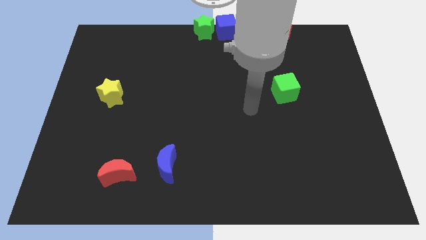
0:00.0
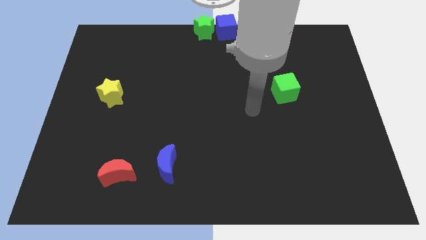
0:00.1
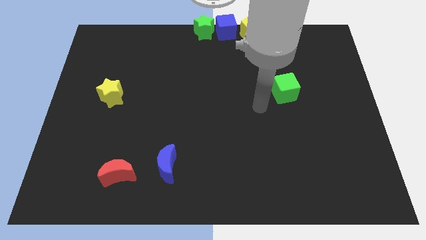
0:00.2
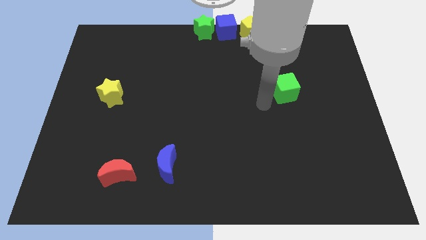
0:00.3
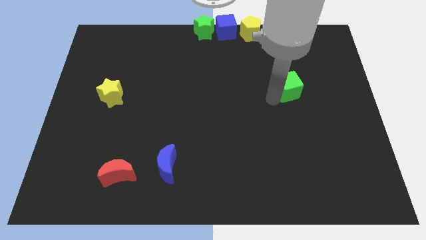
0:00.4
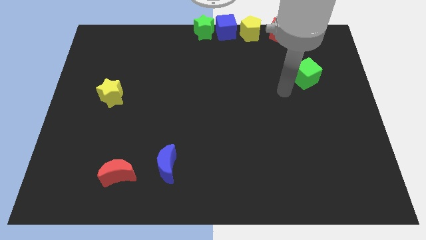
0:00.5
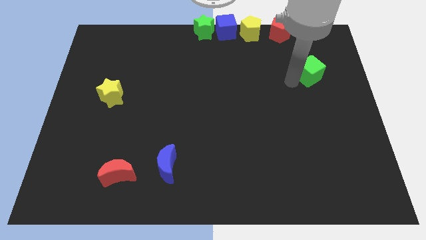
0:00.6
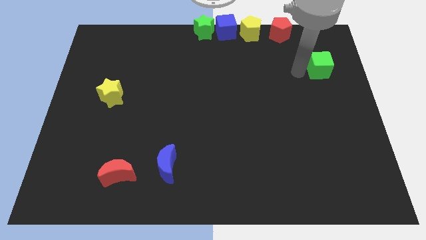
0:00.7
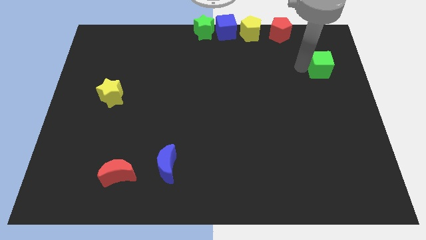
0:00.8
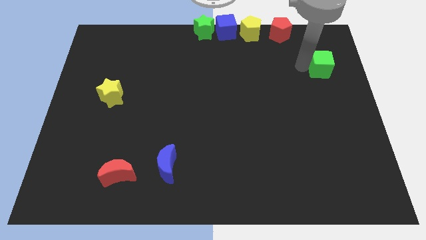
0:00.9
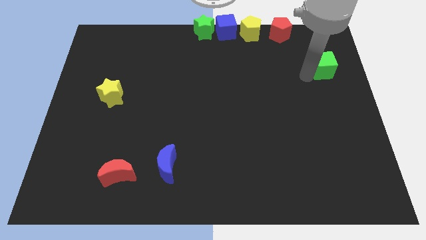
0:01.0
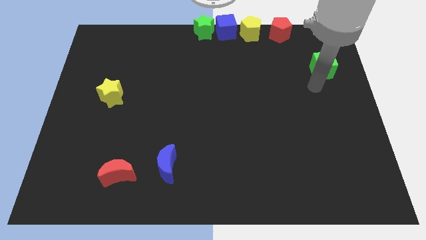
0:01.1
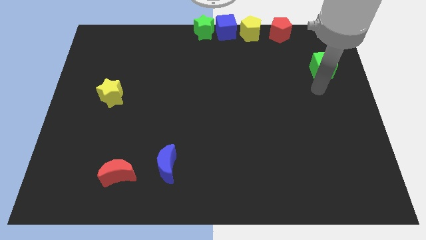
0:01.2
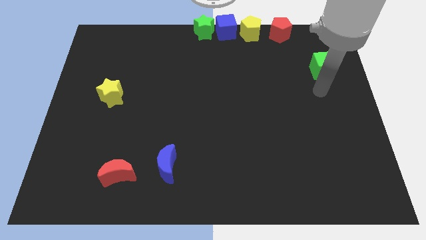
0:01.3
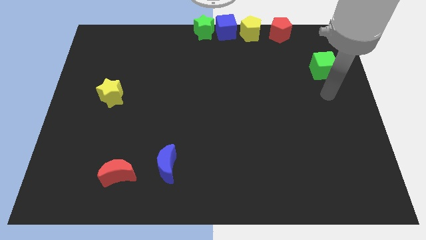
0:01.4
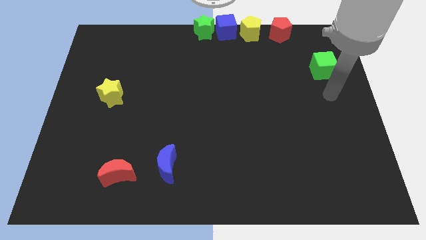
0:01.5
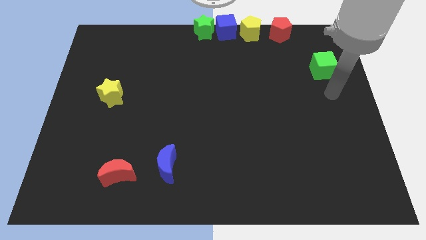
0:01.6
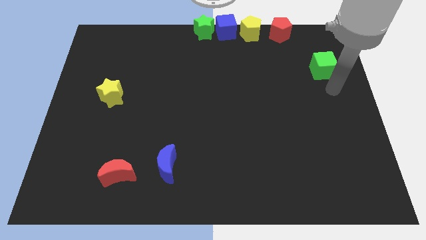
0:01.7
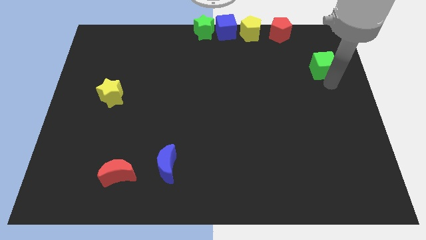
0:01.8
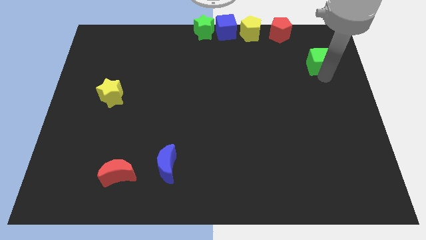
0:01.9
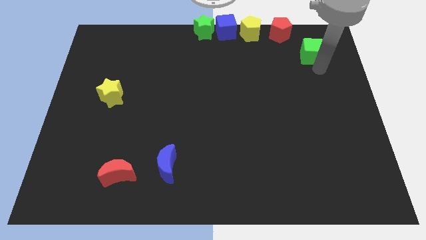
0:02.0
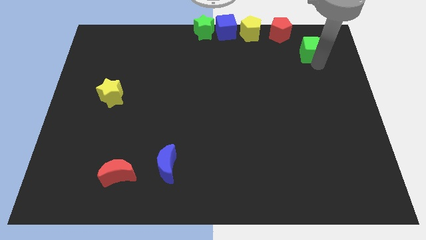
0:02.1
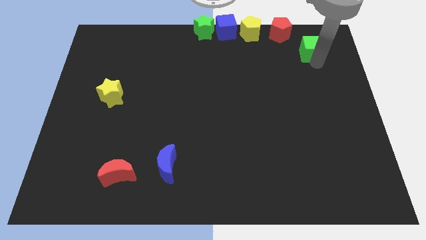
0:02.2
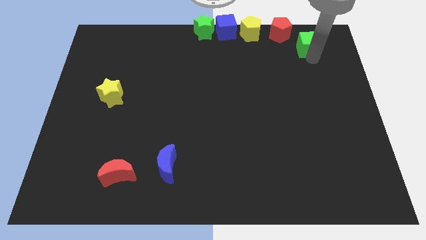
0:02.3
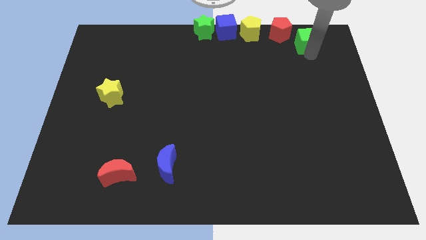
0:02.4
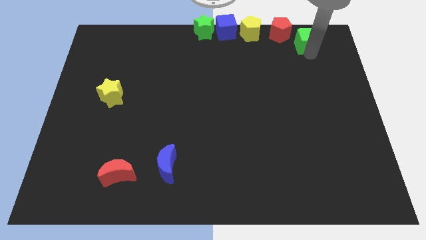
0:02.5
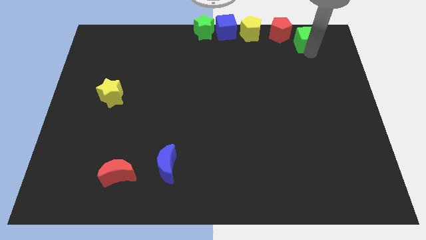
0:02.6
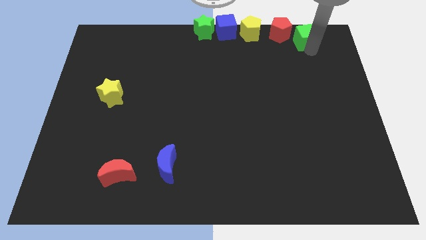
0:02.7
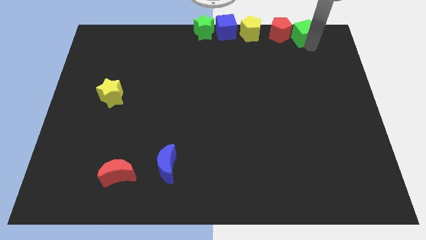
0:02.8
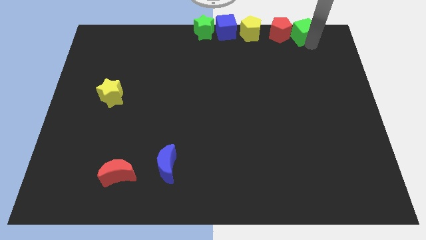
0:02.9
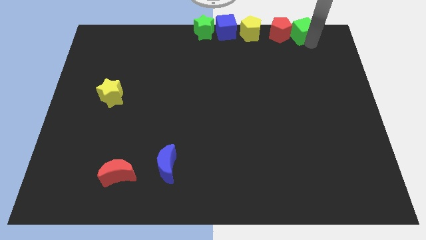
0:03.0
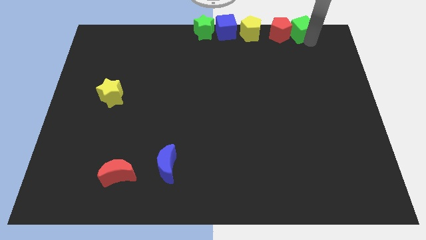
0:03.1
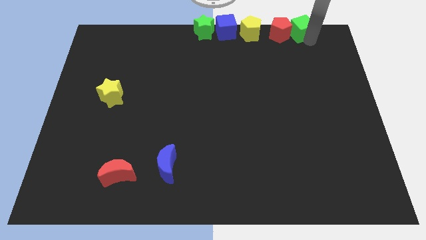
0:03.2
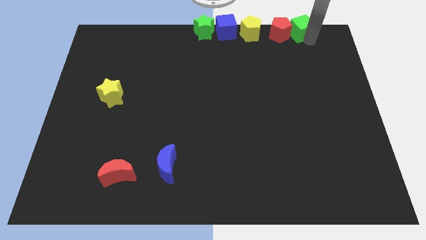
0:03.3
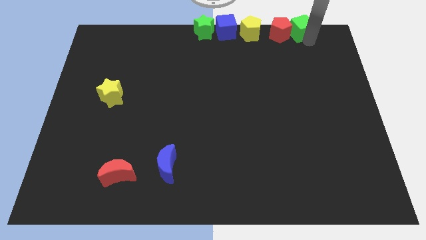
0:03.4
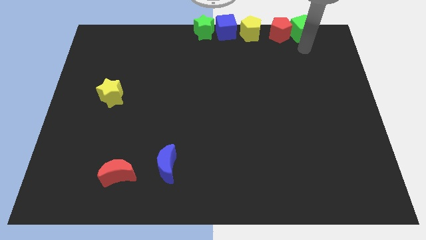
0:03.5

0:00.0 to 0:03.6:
put green cube adjacent to red pentagon

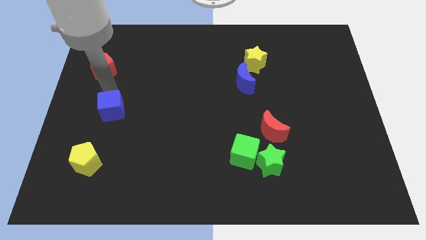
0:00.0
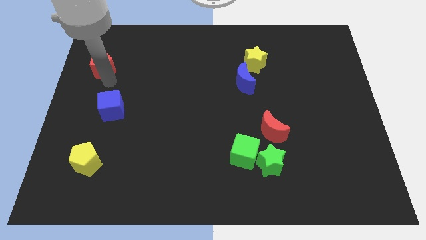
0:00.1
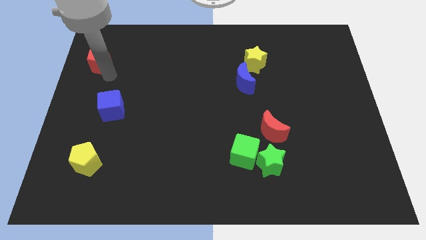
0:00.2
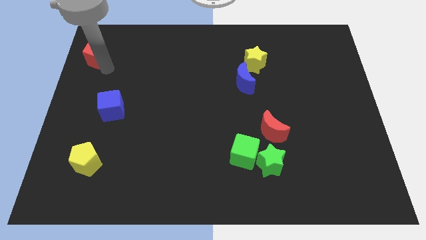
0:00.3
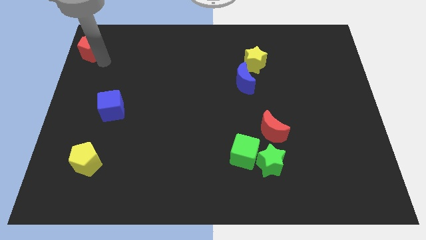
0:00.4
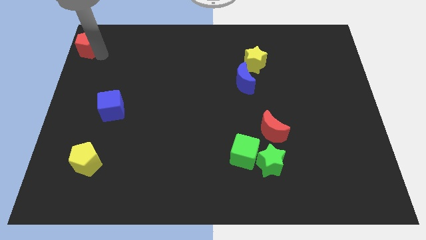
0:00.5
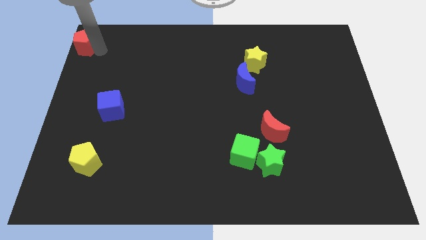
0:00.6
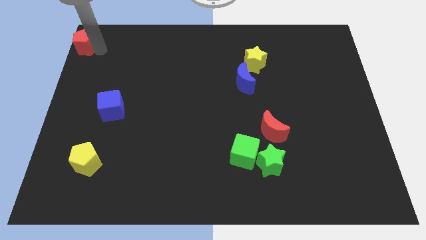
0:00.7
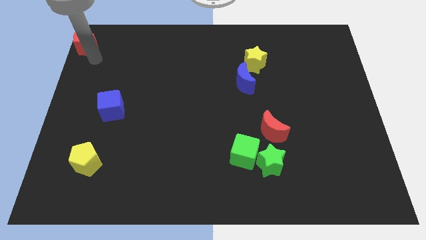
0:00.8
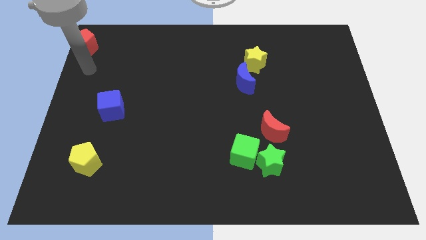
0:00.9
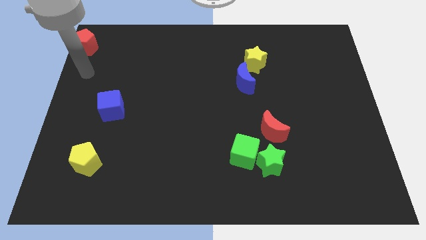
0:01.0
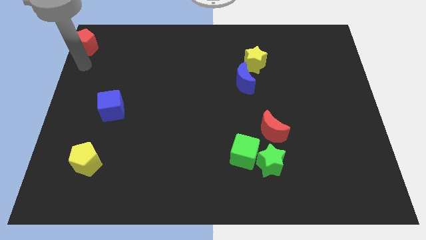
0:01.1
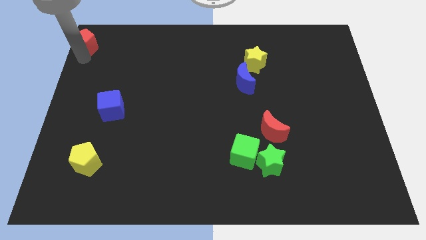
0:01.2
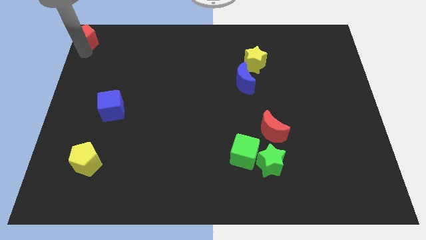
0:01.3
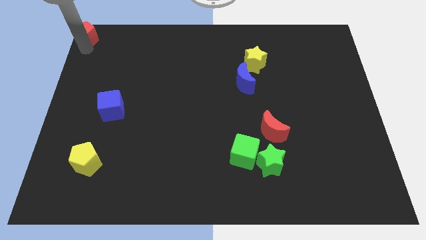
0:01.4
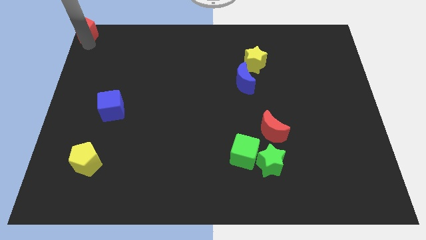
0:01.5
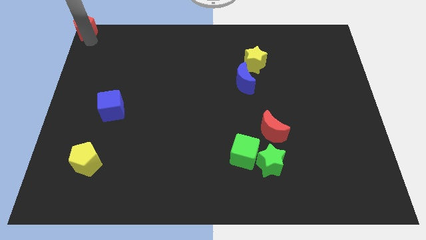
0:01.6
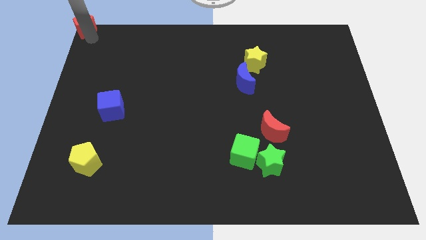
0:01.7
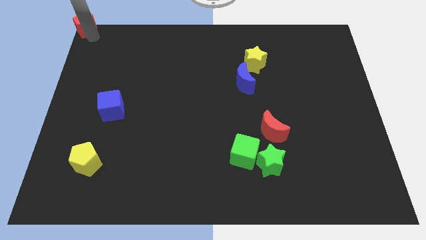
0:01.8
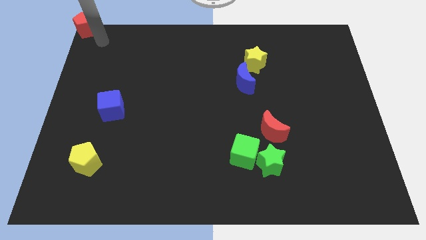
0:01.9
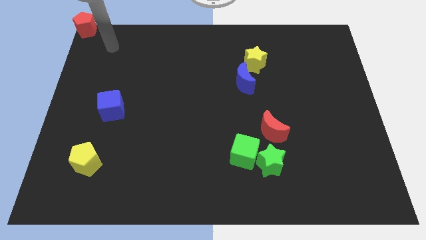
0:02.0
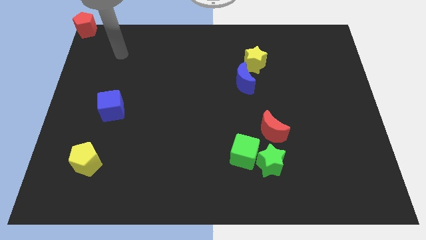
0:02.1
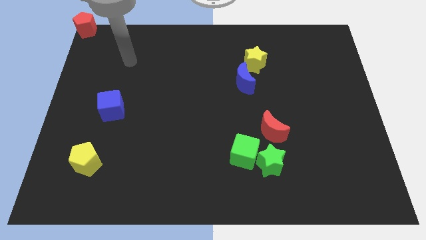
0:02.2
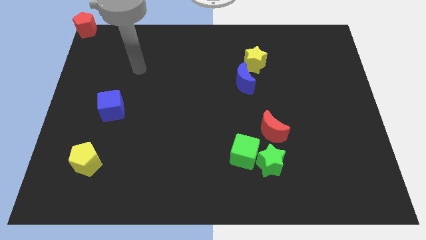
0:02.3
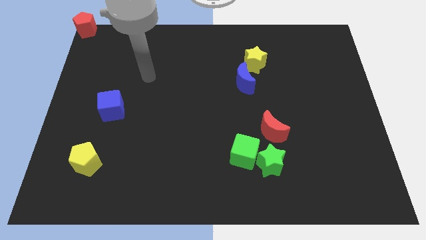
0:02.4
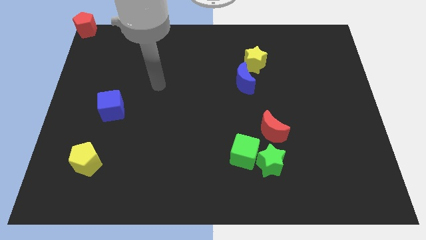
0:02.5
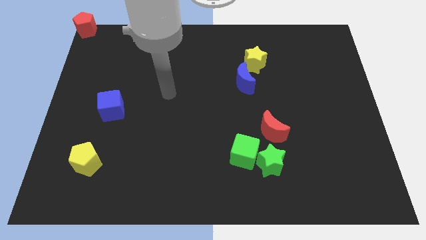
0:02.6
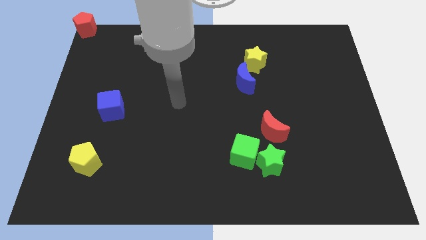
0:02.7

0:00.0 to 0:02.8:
place the red pentagon at the top left corner of the board

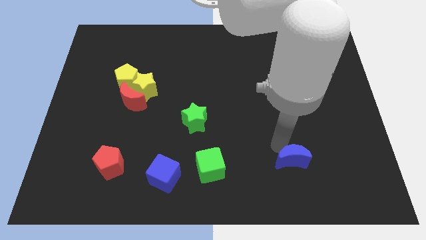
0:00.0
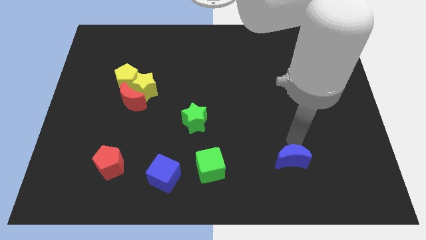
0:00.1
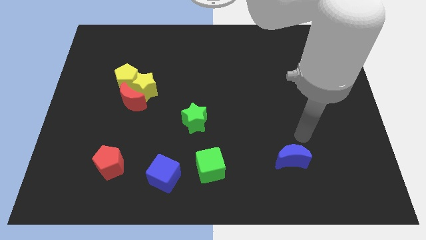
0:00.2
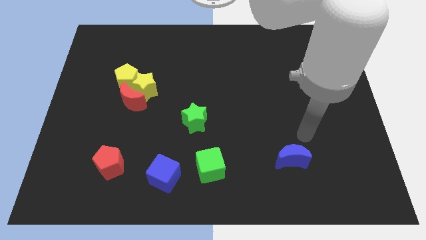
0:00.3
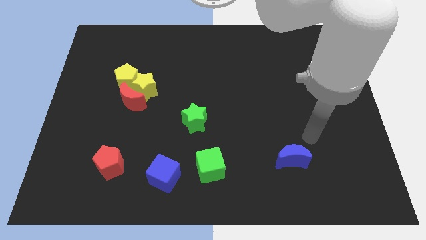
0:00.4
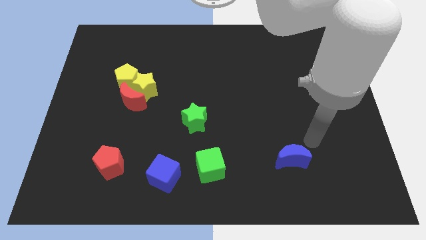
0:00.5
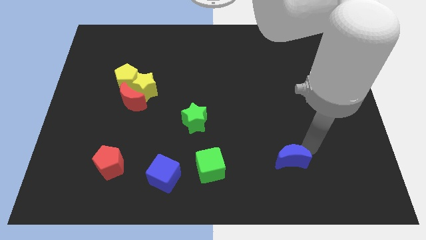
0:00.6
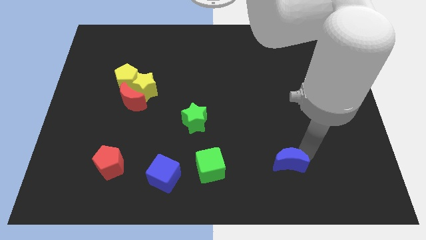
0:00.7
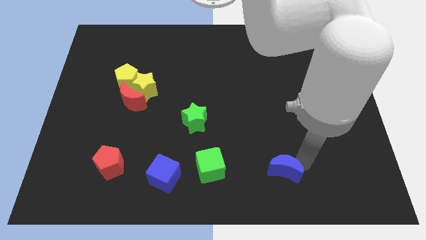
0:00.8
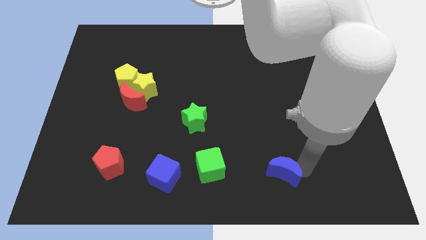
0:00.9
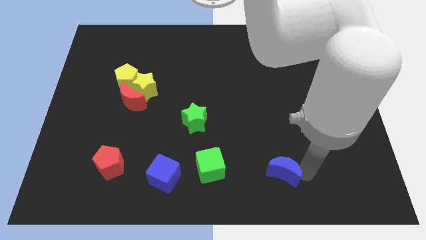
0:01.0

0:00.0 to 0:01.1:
slide blue moon slightly down

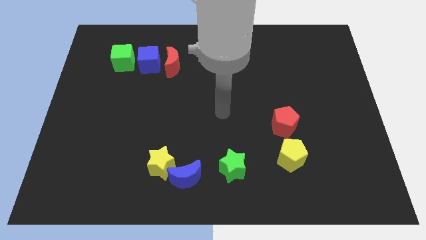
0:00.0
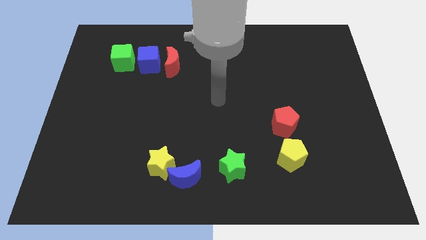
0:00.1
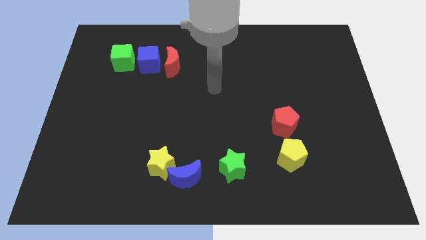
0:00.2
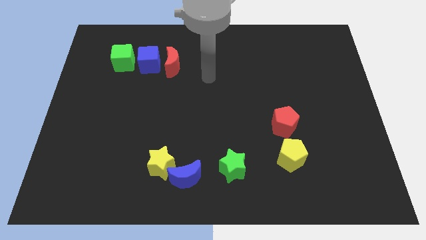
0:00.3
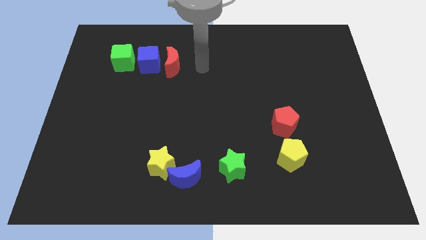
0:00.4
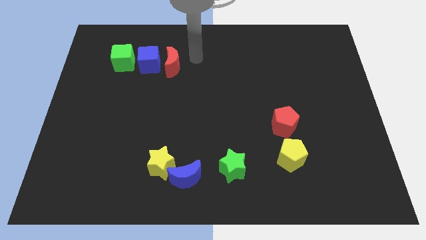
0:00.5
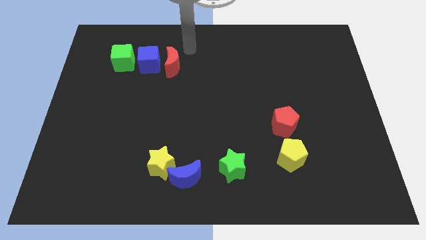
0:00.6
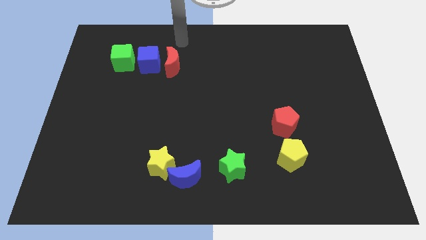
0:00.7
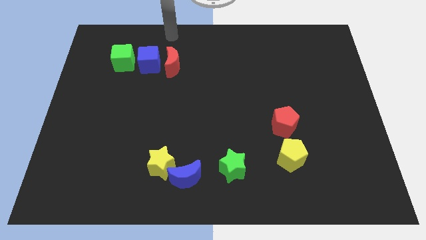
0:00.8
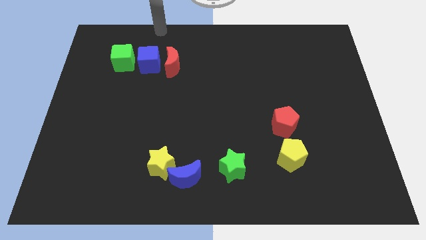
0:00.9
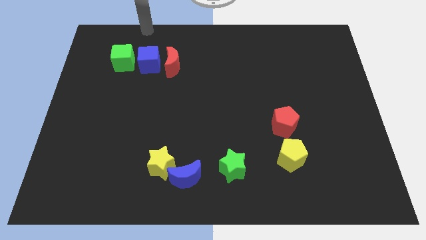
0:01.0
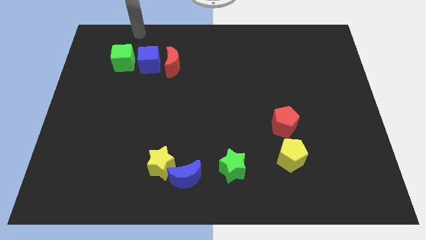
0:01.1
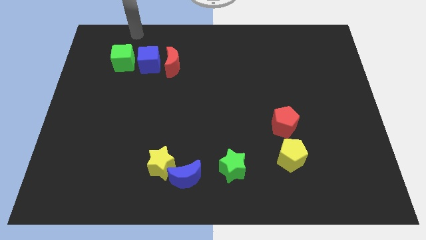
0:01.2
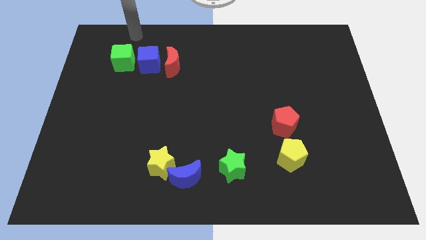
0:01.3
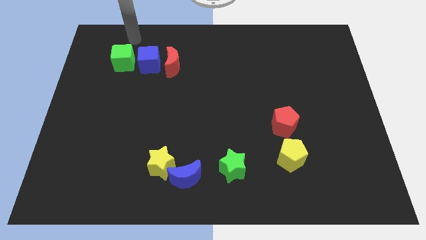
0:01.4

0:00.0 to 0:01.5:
move your arm to the top of green cube

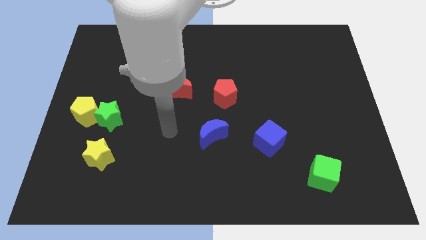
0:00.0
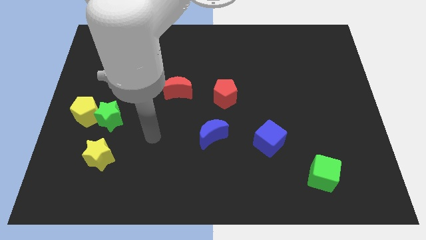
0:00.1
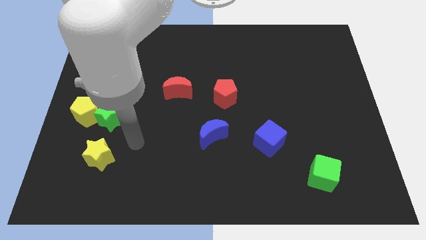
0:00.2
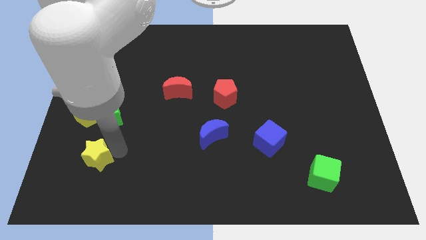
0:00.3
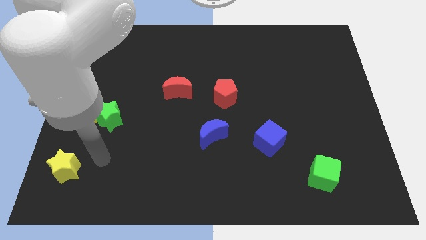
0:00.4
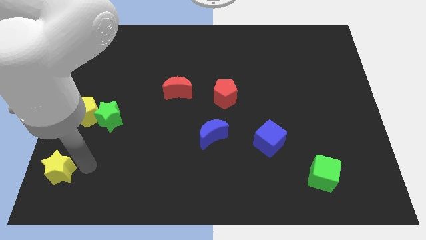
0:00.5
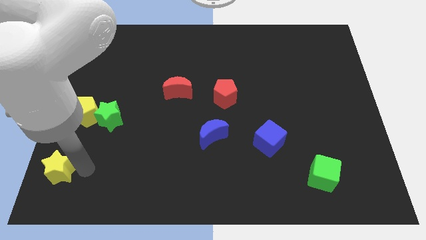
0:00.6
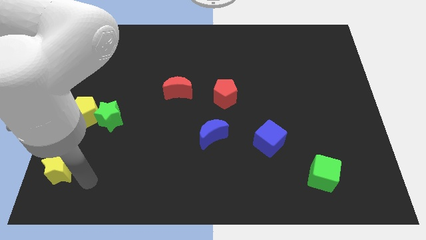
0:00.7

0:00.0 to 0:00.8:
push the yellow star to the bottom left
